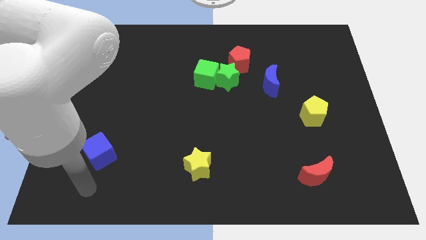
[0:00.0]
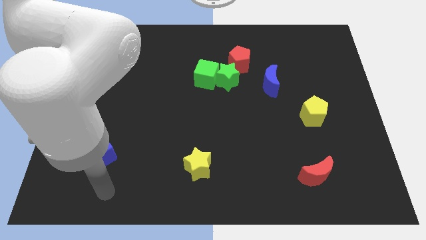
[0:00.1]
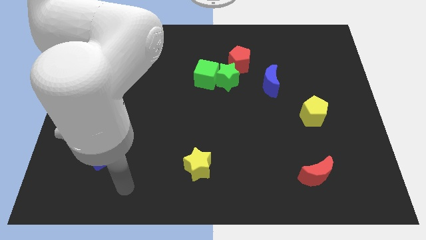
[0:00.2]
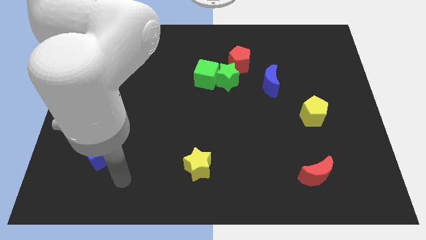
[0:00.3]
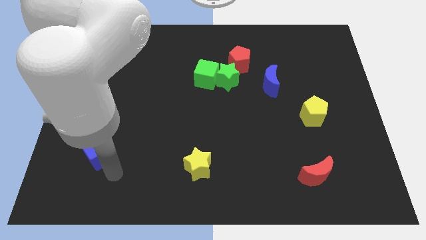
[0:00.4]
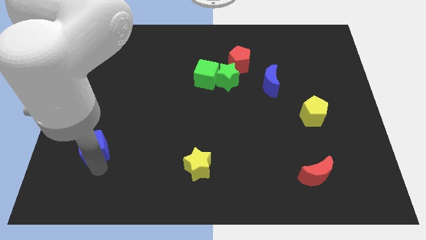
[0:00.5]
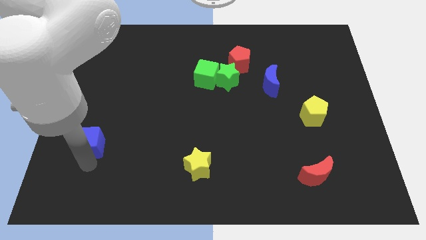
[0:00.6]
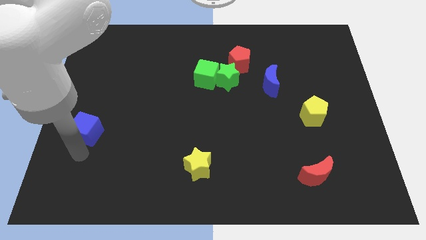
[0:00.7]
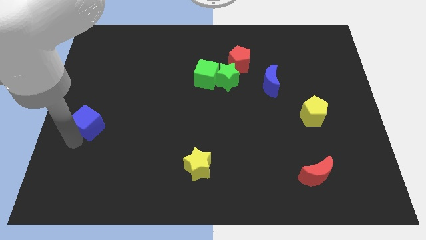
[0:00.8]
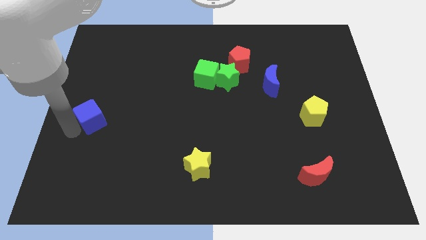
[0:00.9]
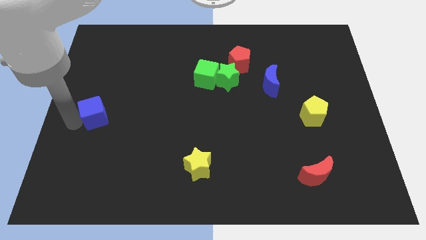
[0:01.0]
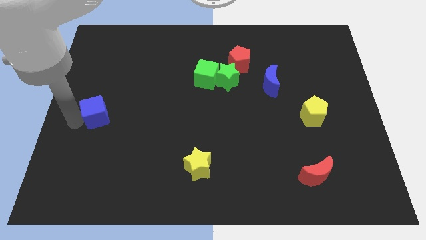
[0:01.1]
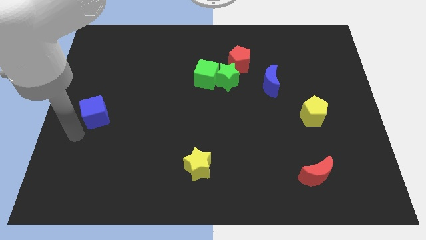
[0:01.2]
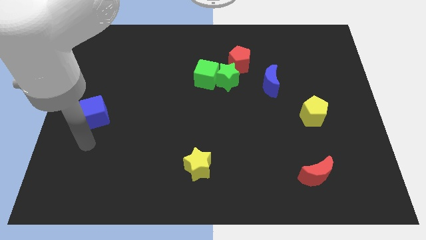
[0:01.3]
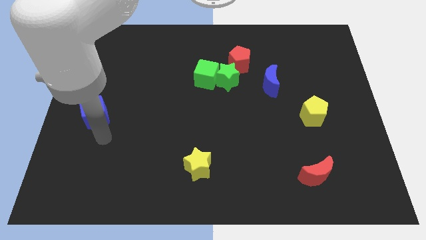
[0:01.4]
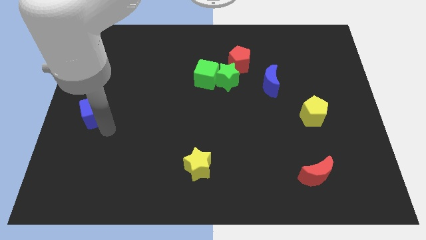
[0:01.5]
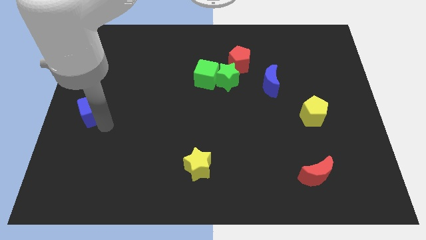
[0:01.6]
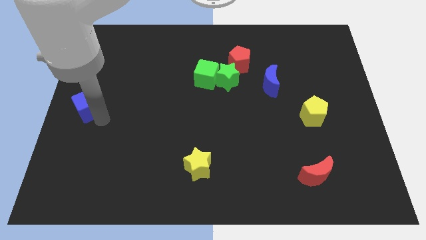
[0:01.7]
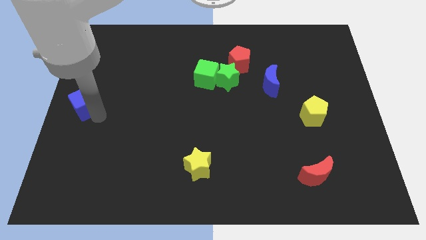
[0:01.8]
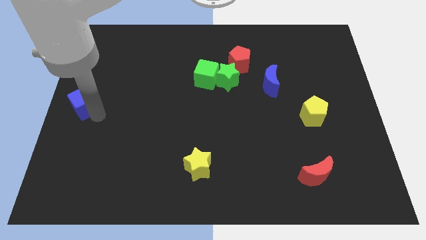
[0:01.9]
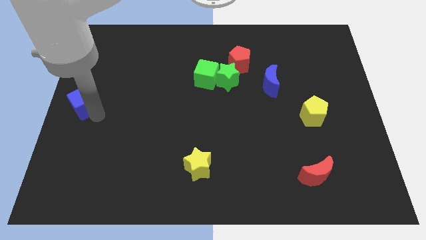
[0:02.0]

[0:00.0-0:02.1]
move the blue cube slightly to the center left of the board

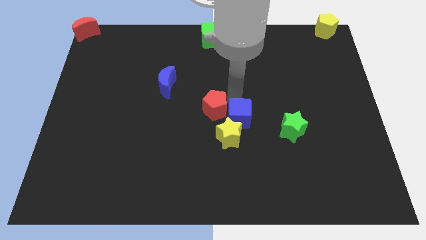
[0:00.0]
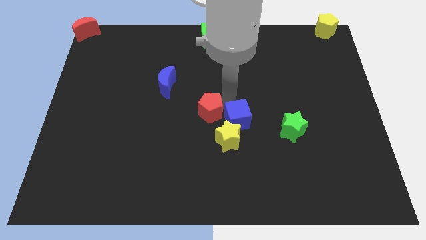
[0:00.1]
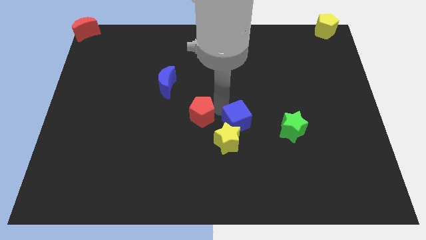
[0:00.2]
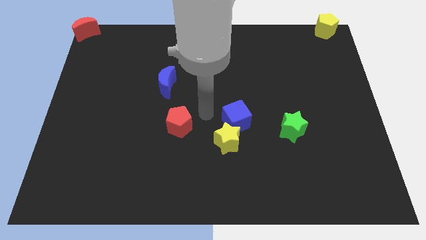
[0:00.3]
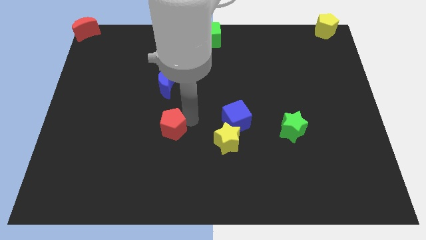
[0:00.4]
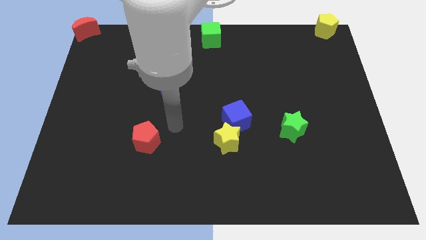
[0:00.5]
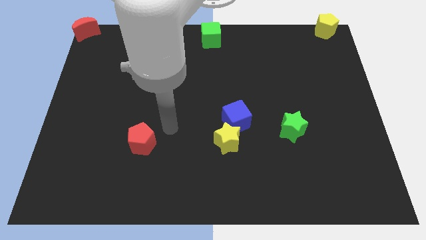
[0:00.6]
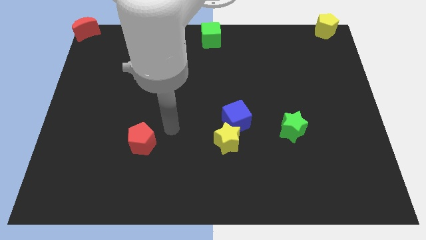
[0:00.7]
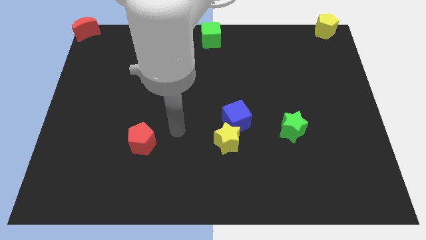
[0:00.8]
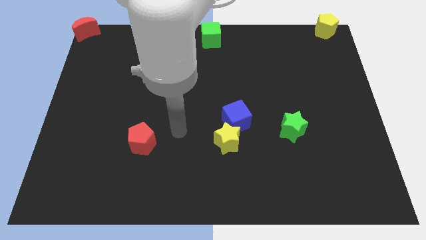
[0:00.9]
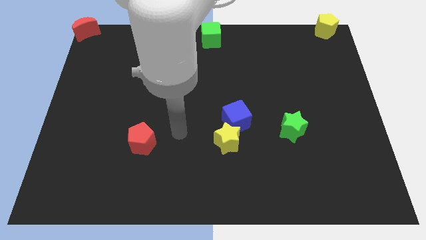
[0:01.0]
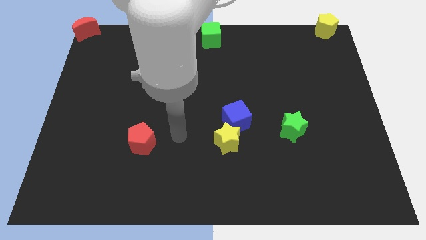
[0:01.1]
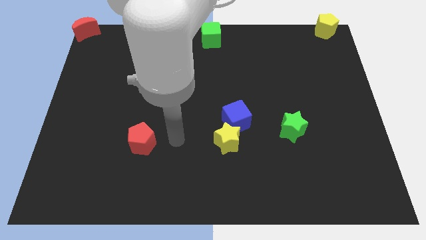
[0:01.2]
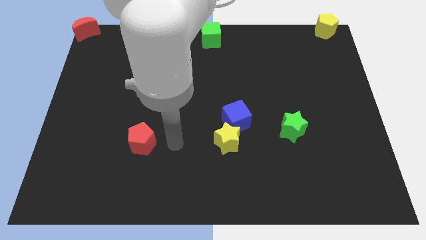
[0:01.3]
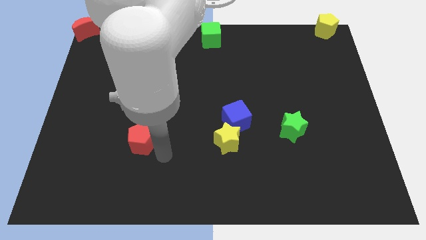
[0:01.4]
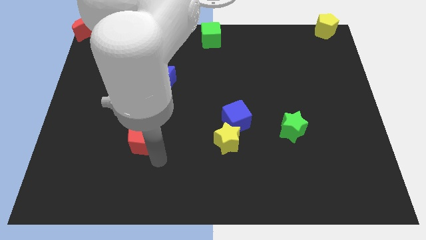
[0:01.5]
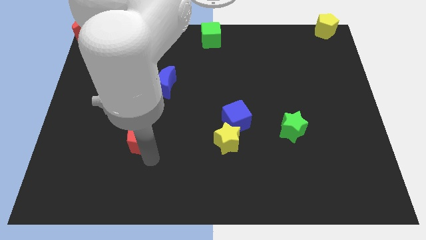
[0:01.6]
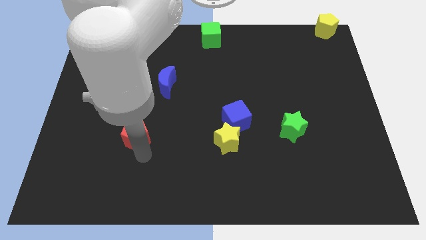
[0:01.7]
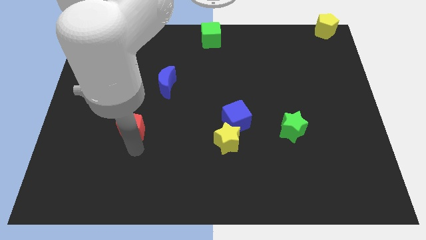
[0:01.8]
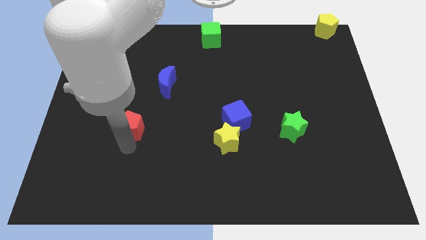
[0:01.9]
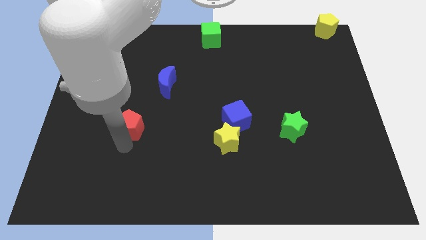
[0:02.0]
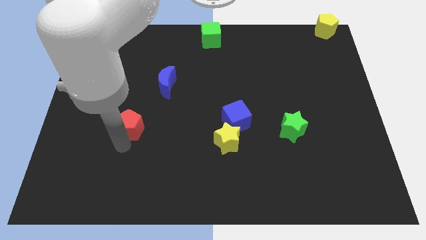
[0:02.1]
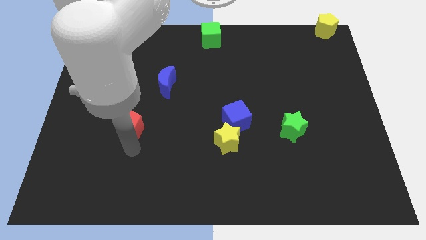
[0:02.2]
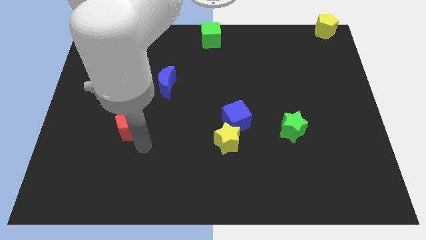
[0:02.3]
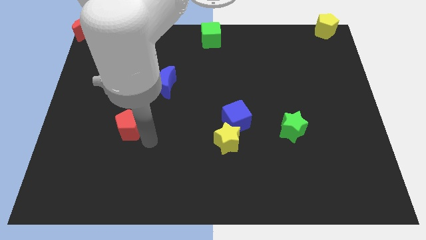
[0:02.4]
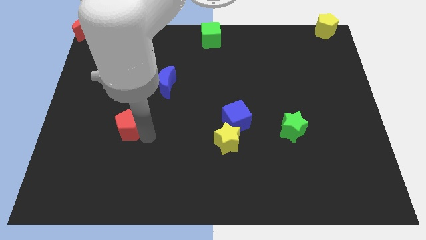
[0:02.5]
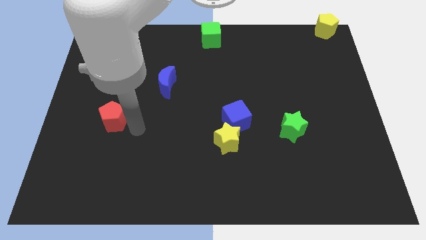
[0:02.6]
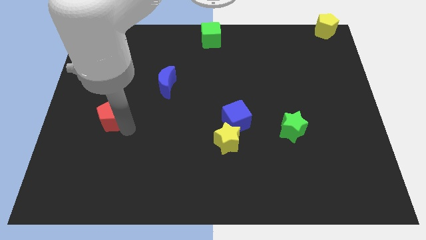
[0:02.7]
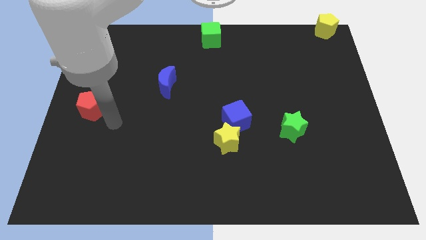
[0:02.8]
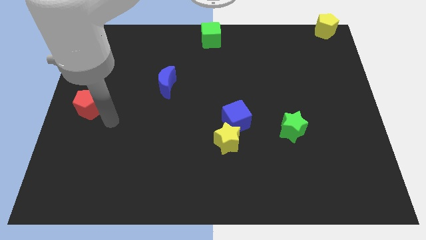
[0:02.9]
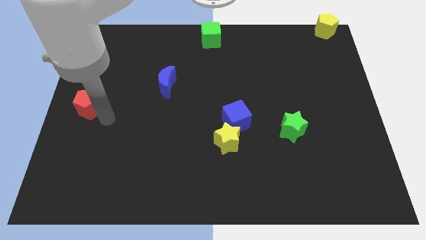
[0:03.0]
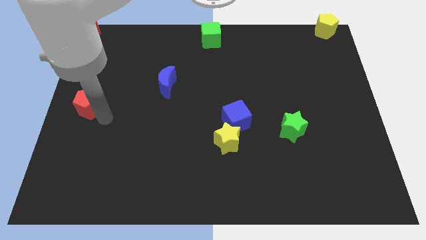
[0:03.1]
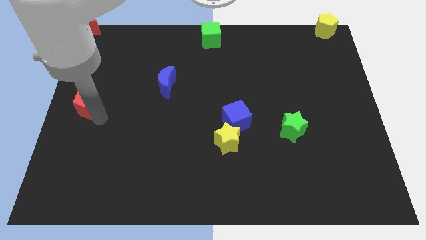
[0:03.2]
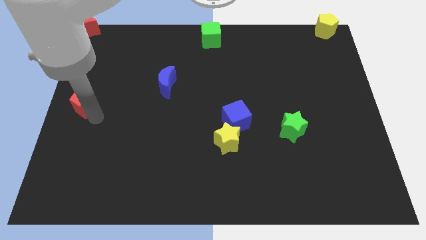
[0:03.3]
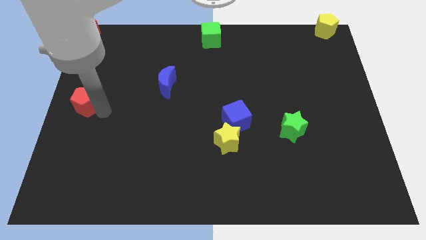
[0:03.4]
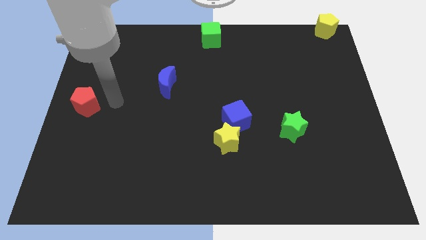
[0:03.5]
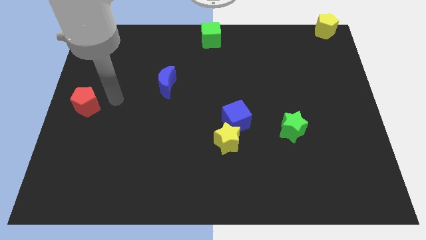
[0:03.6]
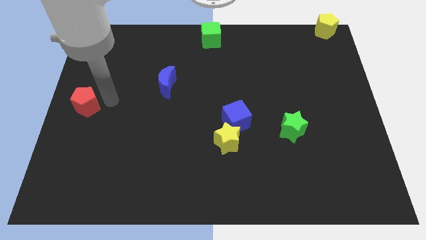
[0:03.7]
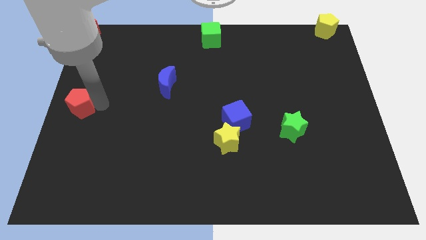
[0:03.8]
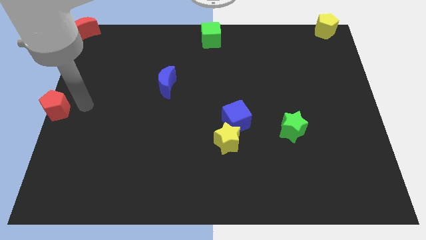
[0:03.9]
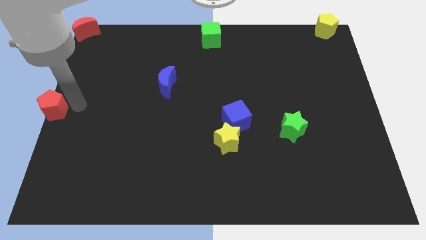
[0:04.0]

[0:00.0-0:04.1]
move the red pentagon to the centre left of board

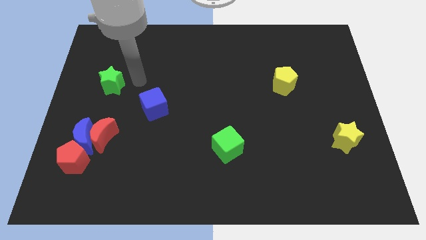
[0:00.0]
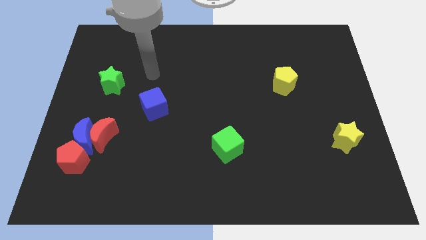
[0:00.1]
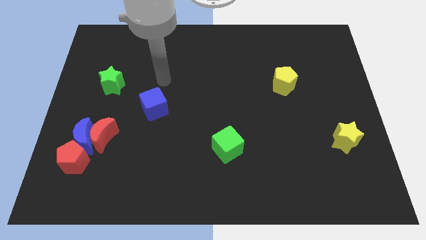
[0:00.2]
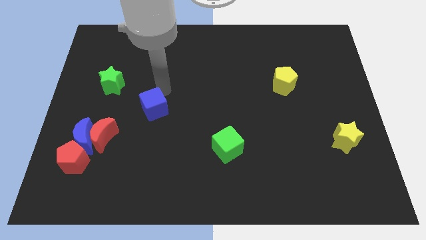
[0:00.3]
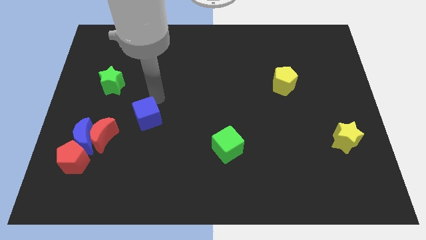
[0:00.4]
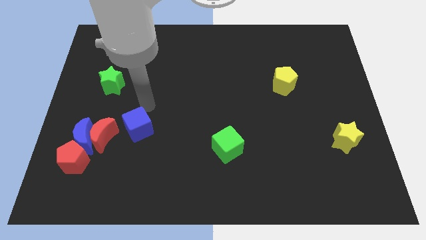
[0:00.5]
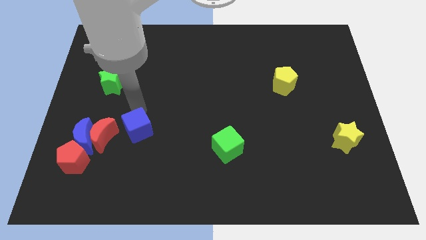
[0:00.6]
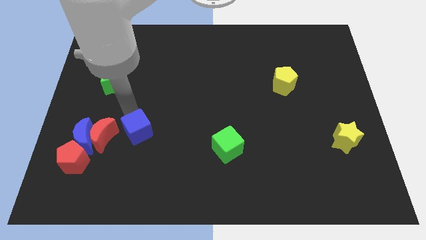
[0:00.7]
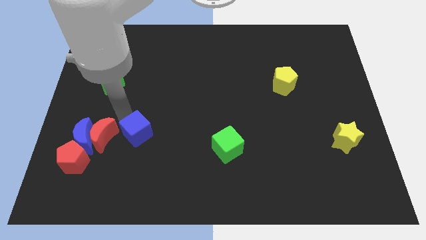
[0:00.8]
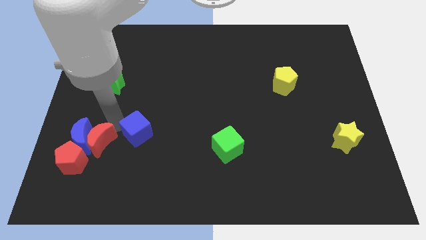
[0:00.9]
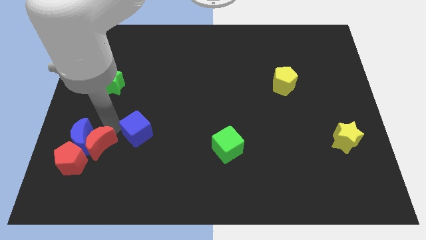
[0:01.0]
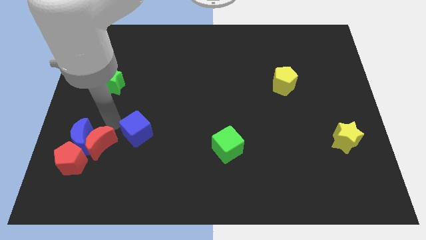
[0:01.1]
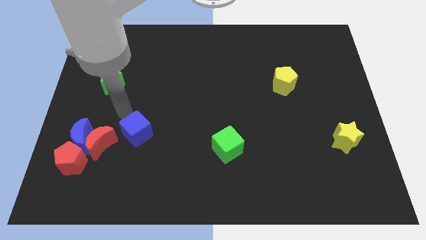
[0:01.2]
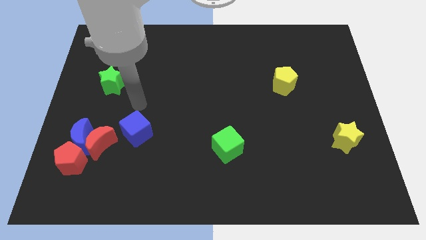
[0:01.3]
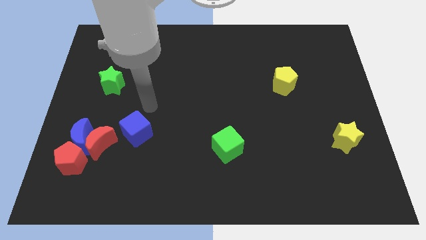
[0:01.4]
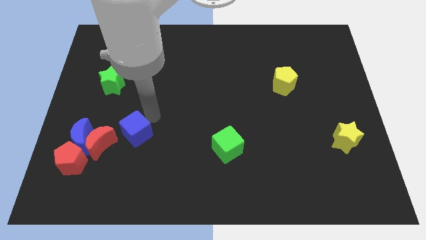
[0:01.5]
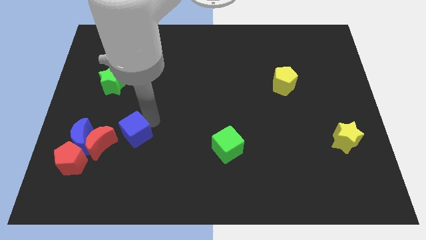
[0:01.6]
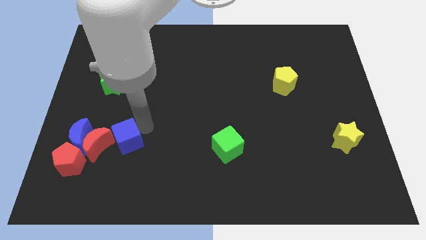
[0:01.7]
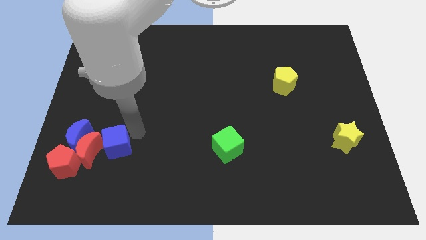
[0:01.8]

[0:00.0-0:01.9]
slide the blue cube to the top right side of the red crescent

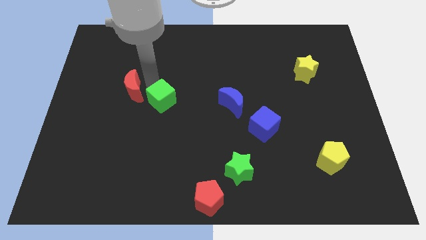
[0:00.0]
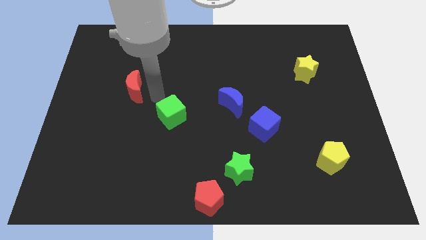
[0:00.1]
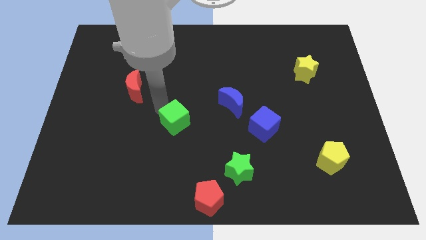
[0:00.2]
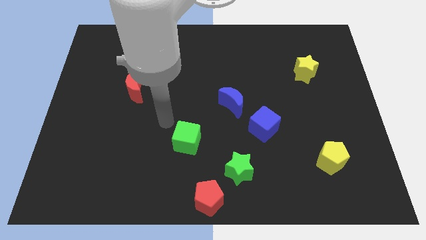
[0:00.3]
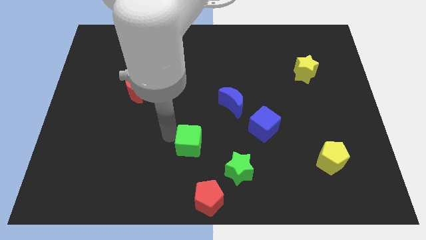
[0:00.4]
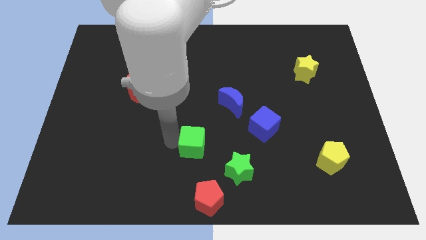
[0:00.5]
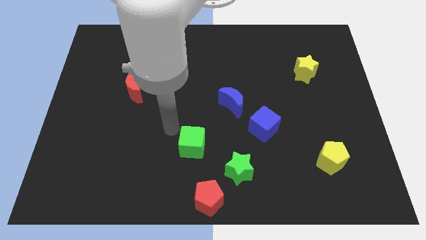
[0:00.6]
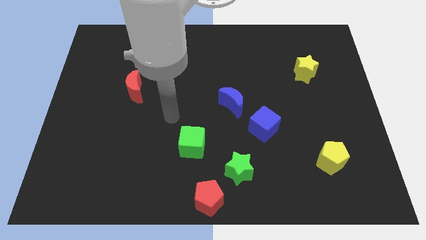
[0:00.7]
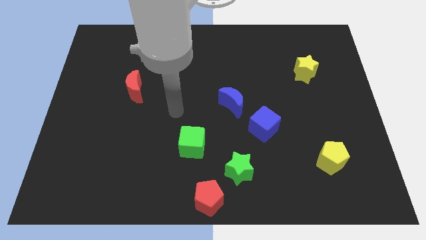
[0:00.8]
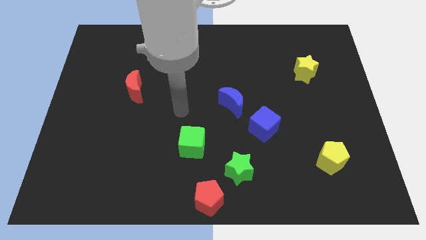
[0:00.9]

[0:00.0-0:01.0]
move the green cube towards green star
